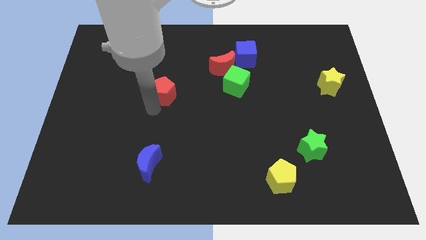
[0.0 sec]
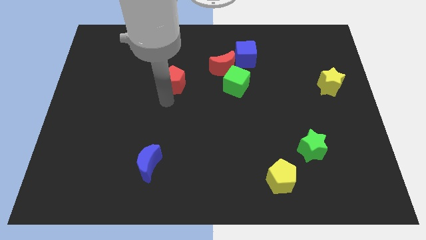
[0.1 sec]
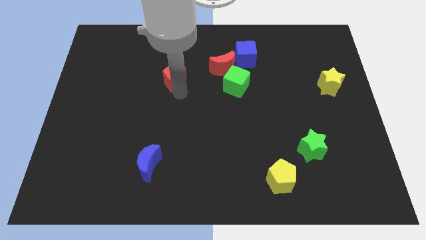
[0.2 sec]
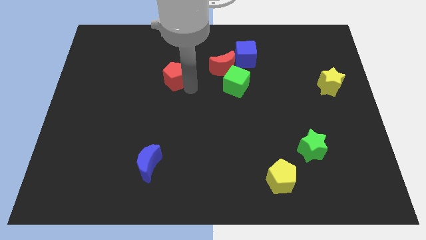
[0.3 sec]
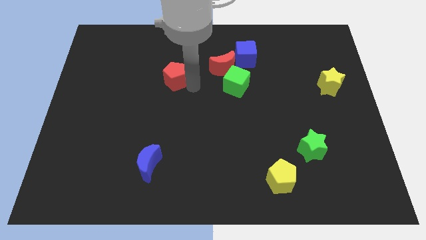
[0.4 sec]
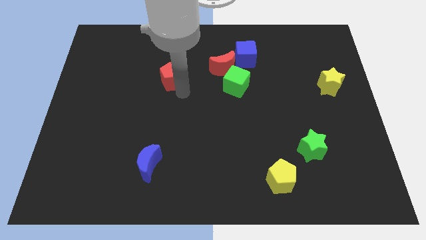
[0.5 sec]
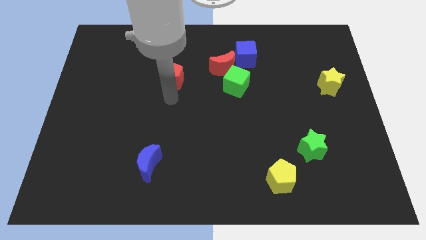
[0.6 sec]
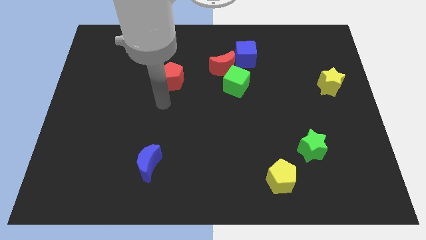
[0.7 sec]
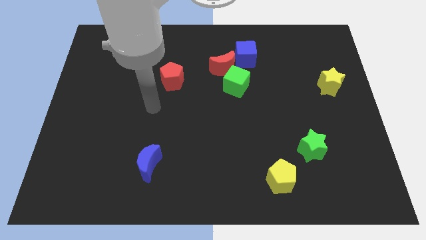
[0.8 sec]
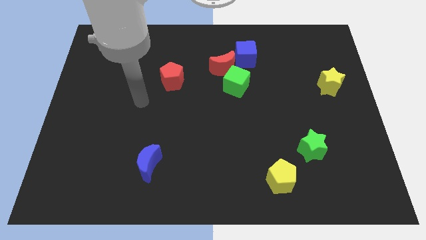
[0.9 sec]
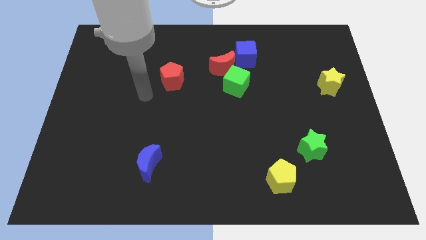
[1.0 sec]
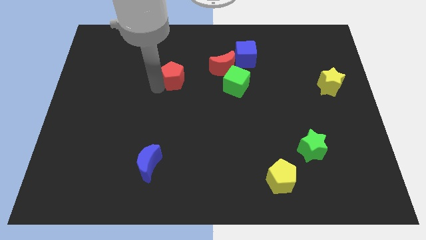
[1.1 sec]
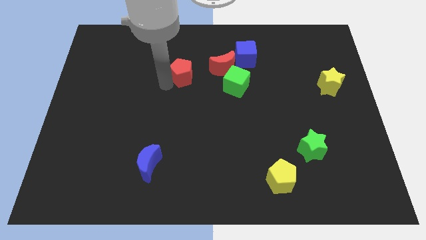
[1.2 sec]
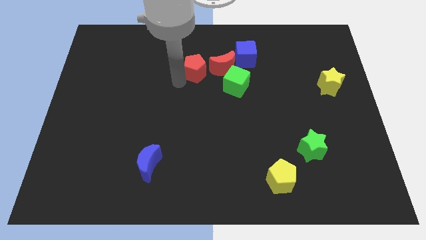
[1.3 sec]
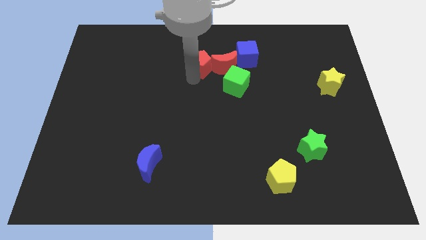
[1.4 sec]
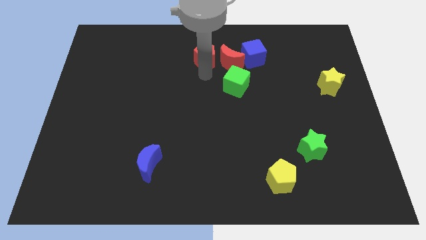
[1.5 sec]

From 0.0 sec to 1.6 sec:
add red pentagon to the red moon and blue cube

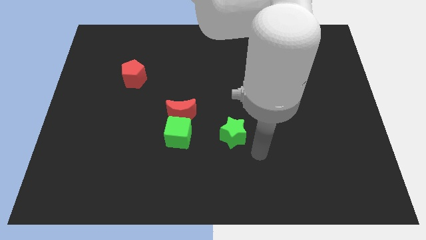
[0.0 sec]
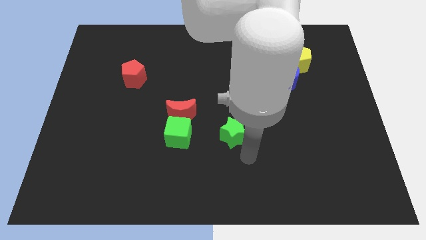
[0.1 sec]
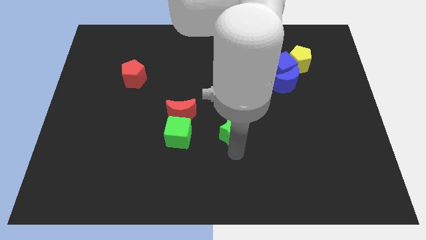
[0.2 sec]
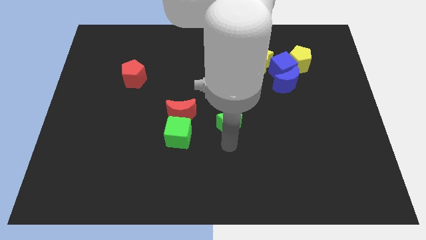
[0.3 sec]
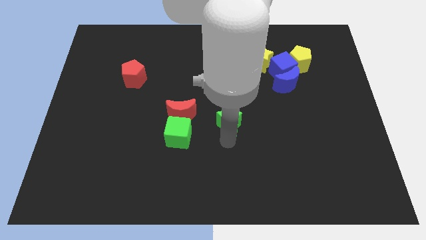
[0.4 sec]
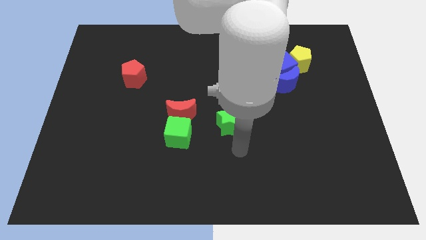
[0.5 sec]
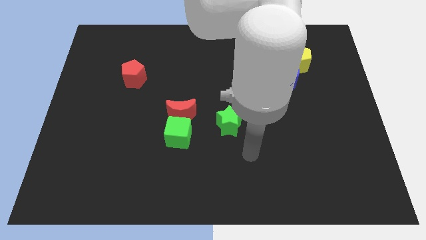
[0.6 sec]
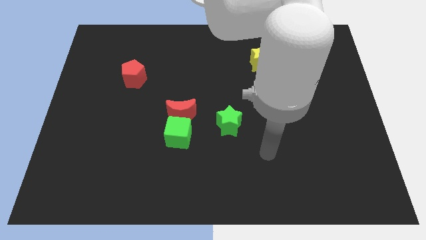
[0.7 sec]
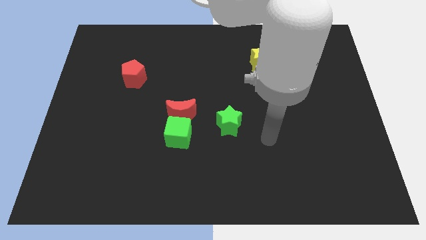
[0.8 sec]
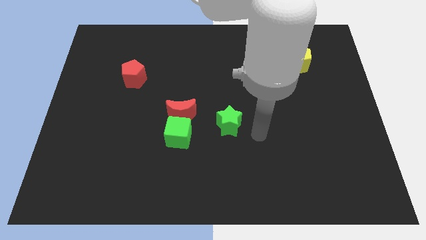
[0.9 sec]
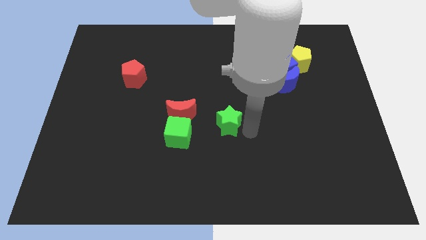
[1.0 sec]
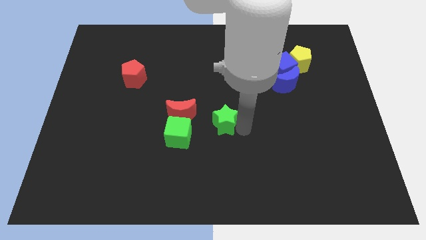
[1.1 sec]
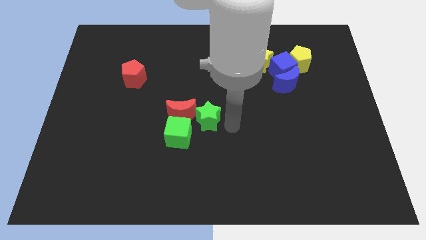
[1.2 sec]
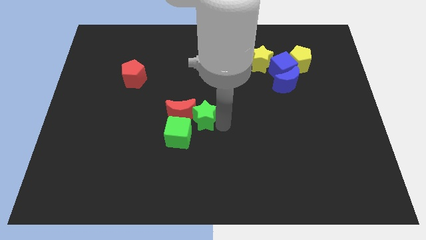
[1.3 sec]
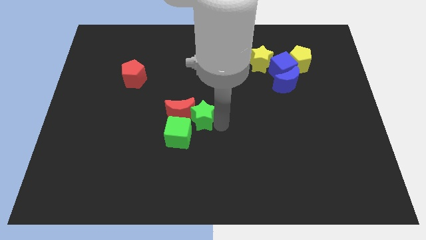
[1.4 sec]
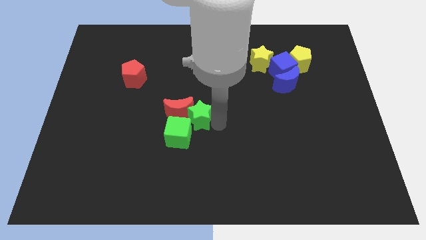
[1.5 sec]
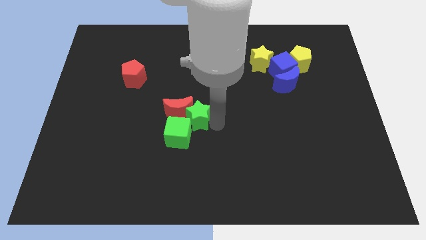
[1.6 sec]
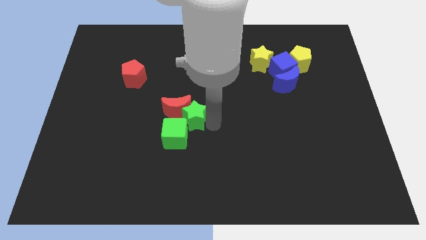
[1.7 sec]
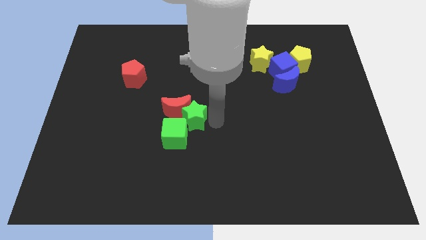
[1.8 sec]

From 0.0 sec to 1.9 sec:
push the green star into the red crescent and green cube

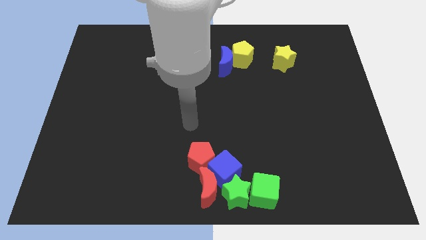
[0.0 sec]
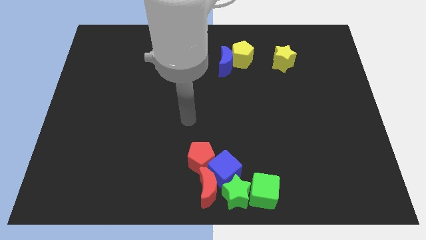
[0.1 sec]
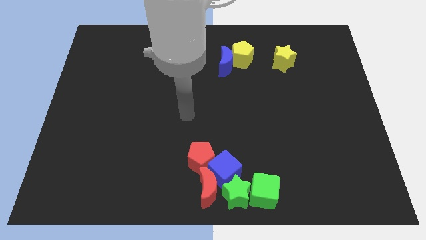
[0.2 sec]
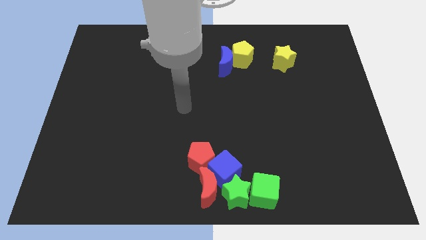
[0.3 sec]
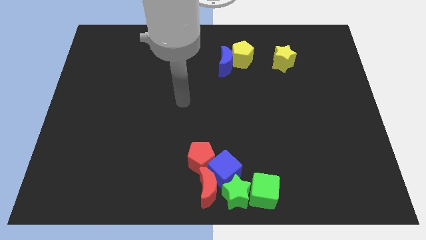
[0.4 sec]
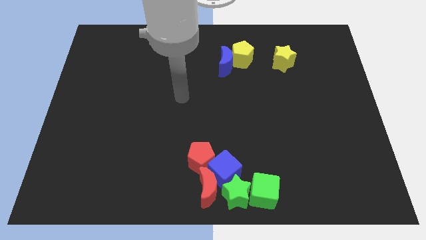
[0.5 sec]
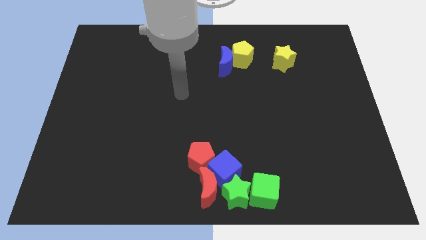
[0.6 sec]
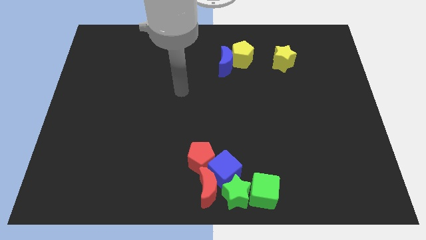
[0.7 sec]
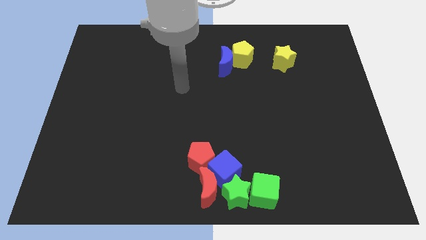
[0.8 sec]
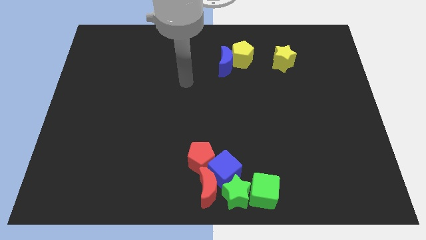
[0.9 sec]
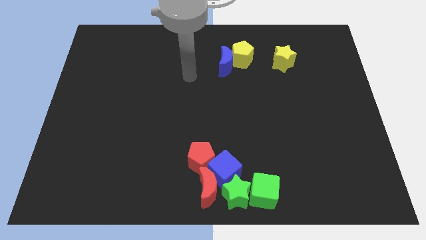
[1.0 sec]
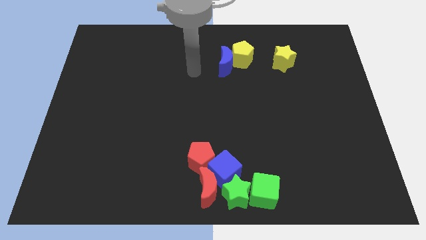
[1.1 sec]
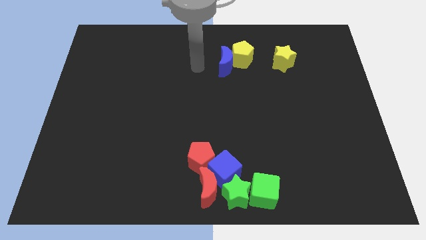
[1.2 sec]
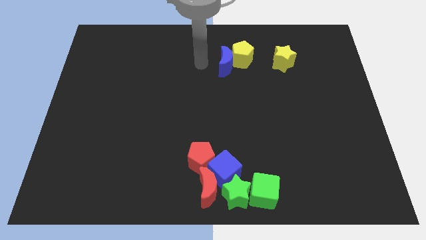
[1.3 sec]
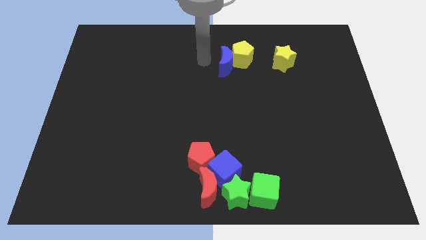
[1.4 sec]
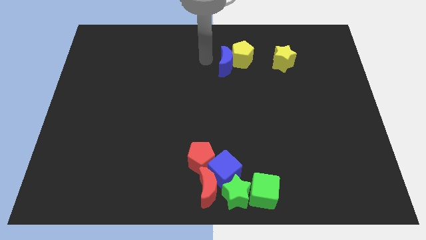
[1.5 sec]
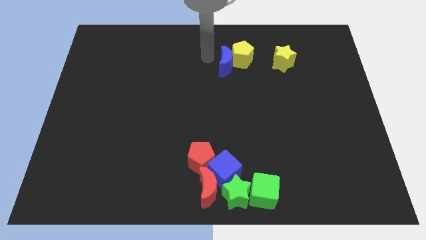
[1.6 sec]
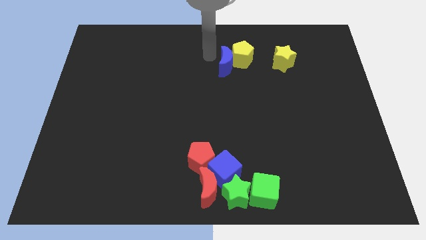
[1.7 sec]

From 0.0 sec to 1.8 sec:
point your arm at the left of the blue crescent

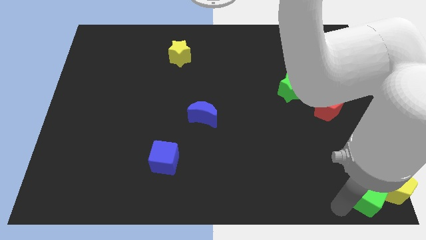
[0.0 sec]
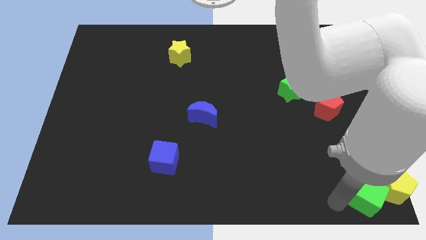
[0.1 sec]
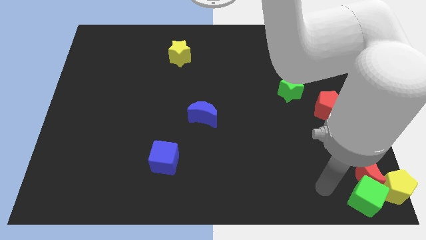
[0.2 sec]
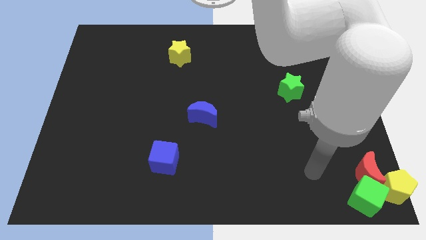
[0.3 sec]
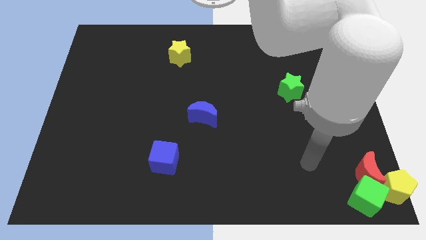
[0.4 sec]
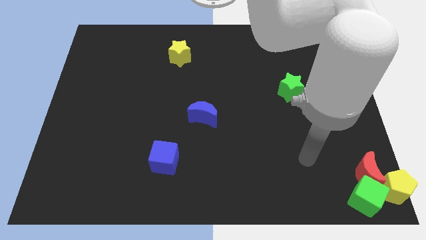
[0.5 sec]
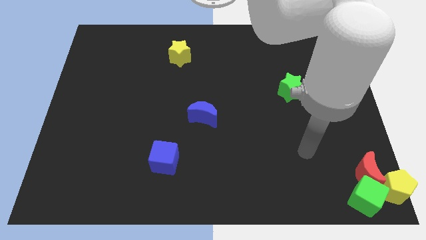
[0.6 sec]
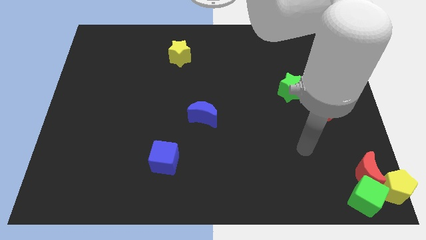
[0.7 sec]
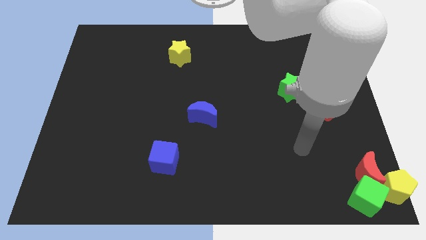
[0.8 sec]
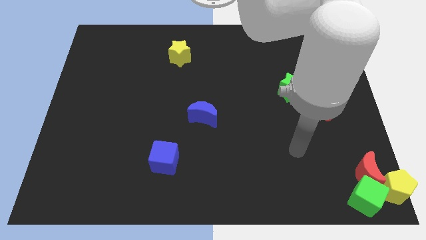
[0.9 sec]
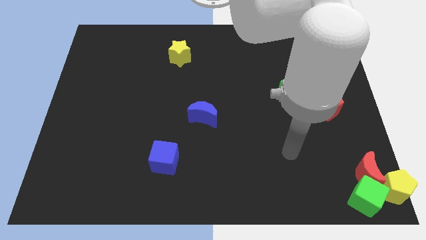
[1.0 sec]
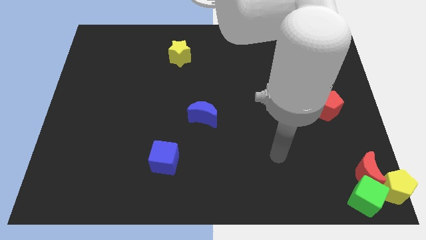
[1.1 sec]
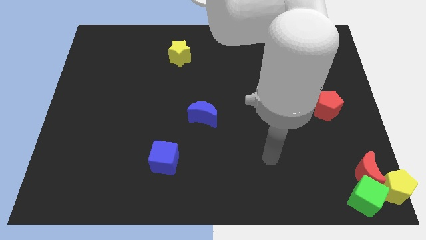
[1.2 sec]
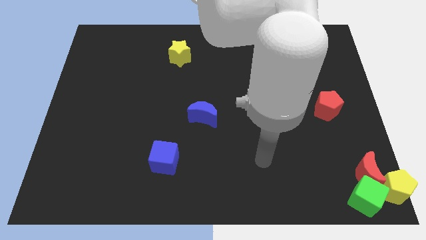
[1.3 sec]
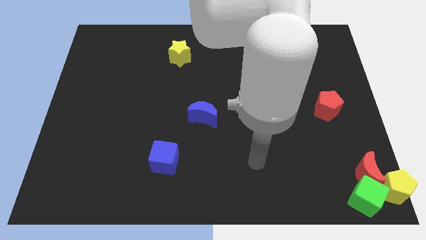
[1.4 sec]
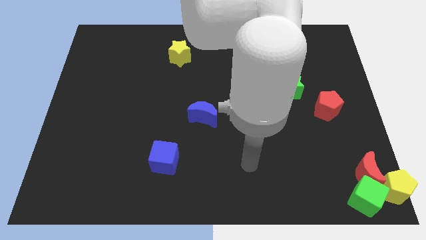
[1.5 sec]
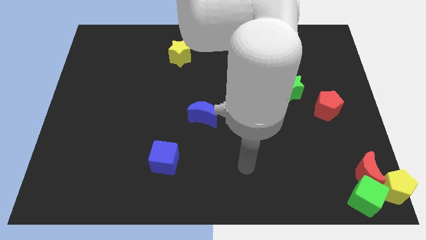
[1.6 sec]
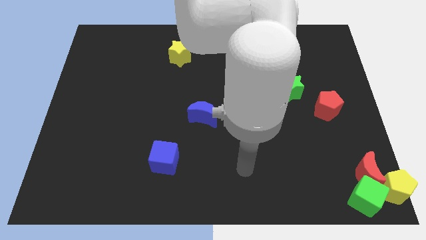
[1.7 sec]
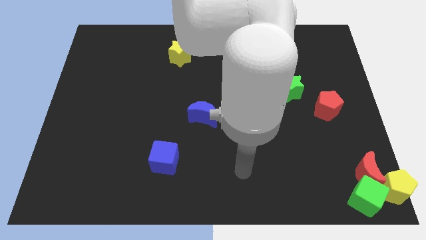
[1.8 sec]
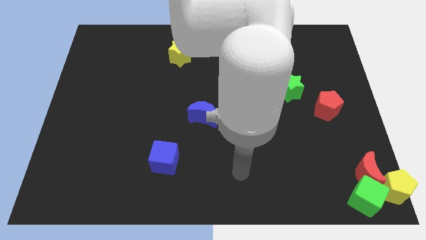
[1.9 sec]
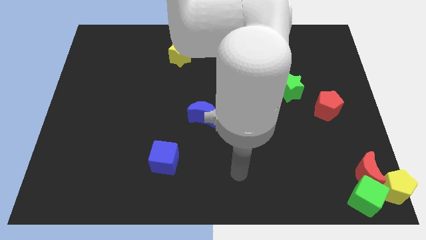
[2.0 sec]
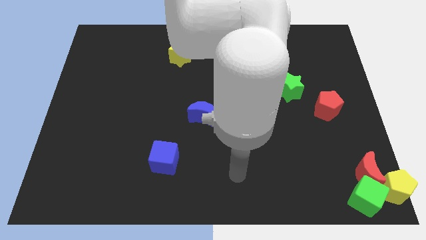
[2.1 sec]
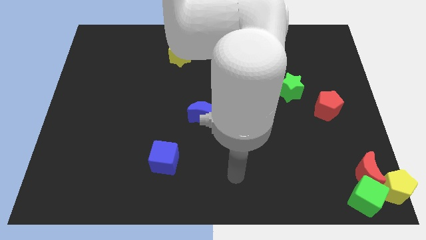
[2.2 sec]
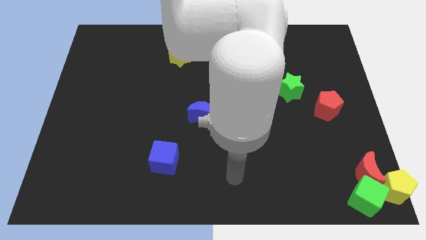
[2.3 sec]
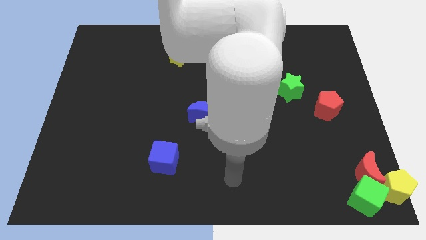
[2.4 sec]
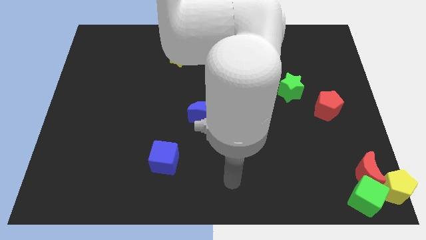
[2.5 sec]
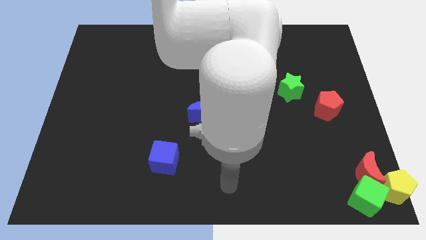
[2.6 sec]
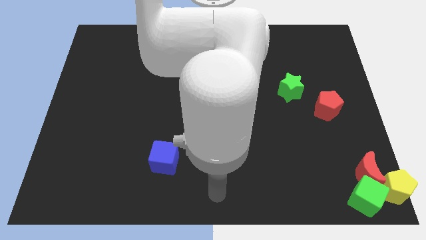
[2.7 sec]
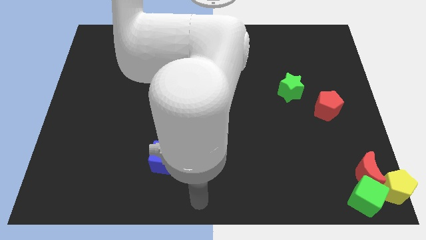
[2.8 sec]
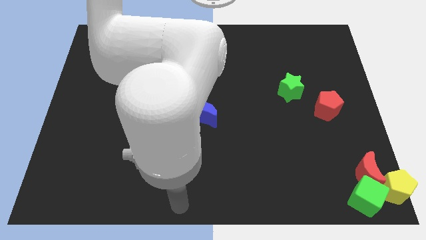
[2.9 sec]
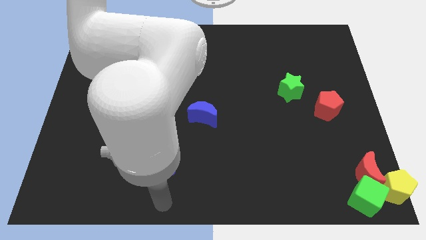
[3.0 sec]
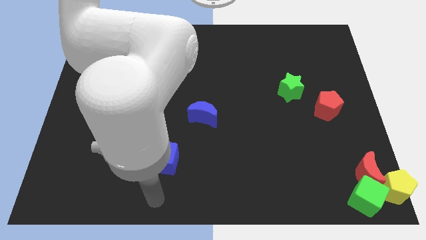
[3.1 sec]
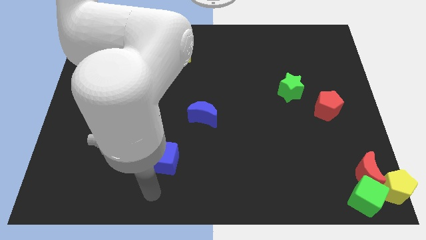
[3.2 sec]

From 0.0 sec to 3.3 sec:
move your arm below the blue cube

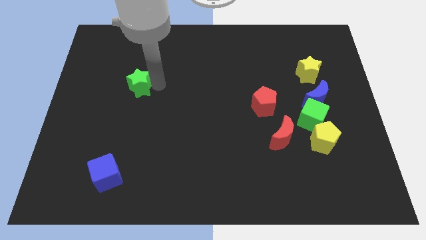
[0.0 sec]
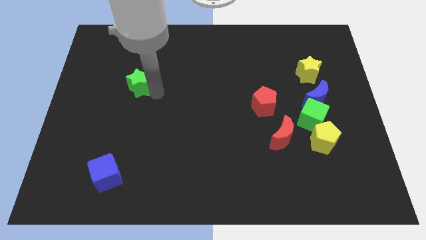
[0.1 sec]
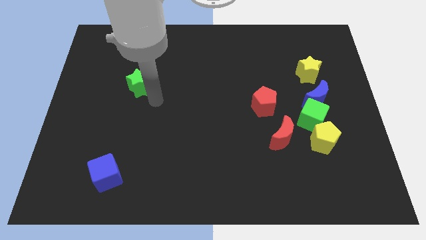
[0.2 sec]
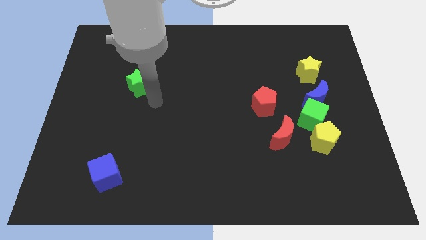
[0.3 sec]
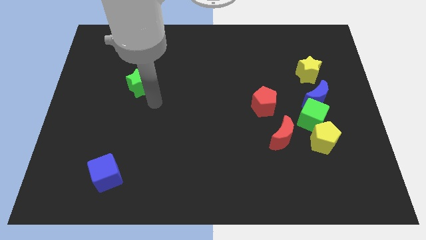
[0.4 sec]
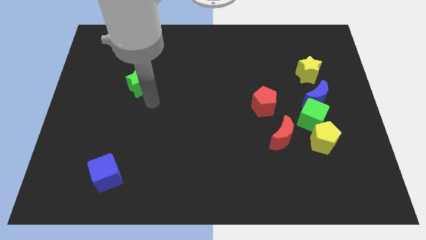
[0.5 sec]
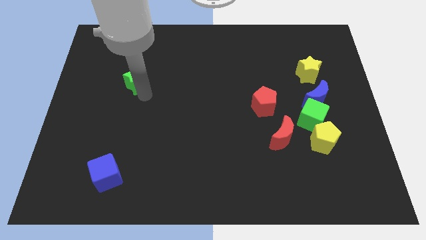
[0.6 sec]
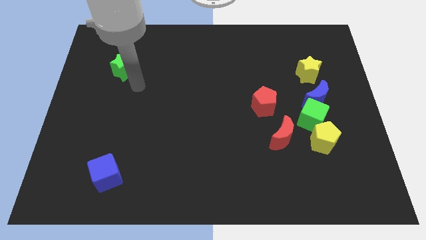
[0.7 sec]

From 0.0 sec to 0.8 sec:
tap the green star below
